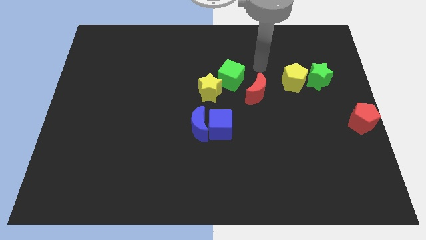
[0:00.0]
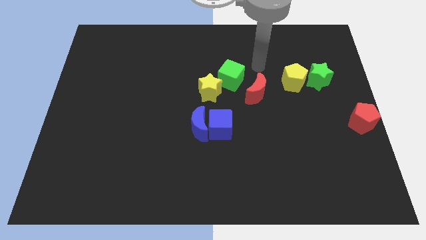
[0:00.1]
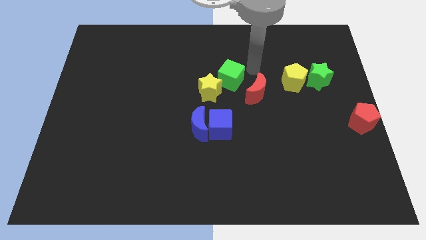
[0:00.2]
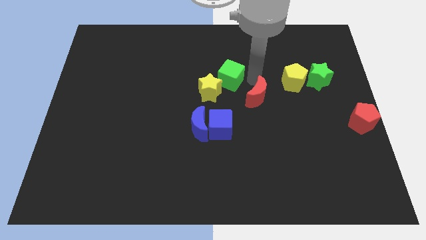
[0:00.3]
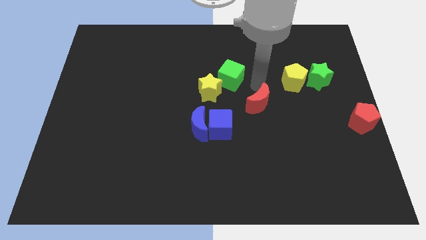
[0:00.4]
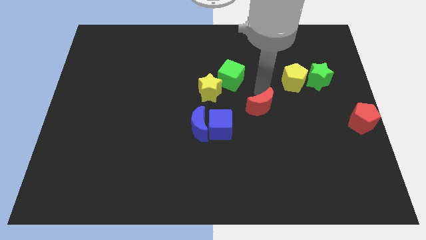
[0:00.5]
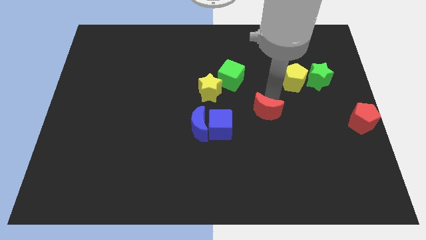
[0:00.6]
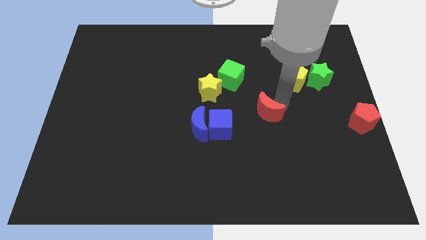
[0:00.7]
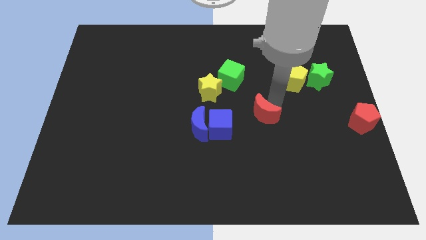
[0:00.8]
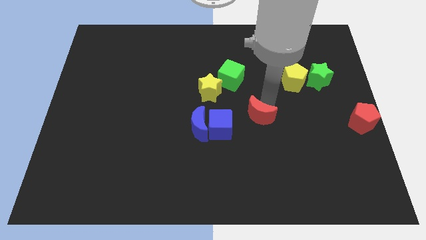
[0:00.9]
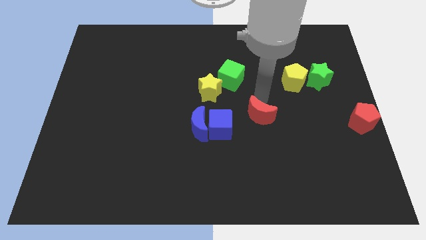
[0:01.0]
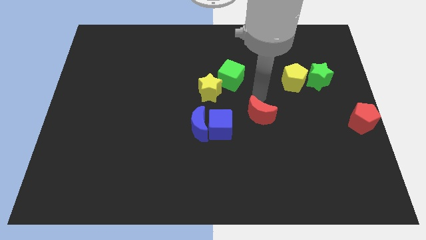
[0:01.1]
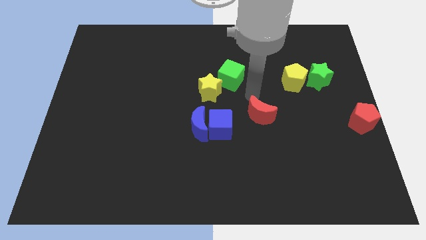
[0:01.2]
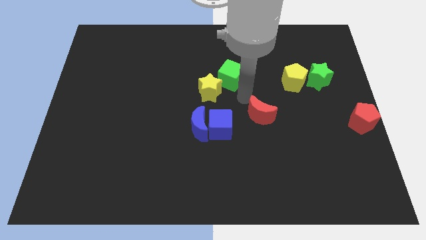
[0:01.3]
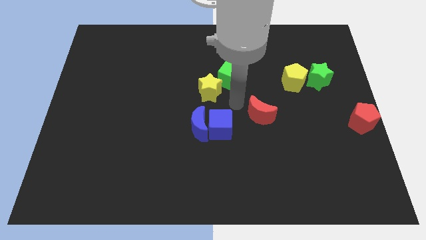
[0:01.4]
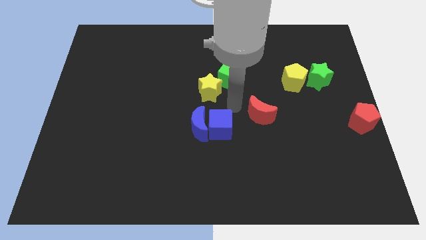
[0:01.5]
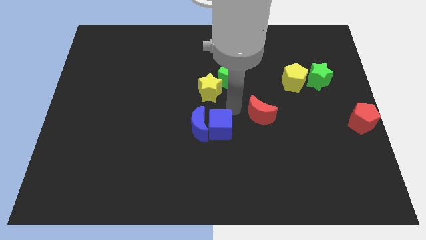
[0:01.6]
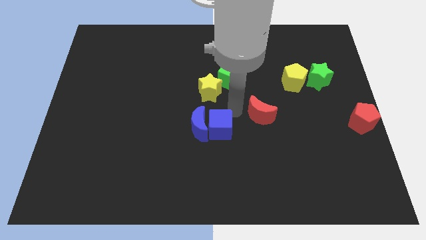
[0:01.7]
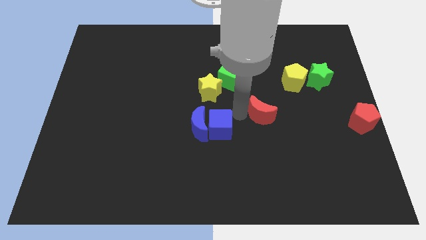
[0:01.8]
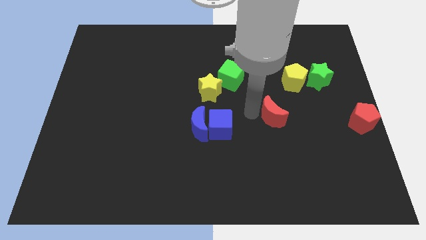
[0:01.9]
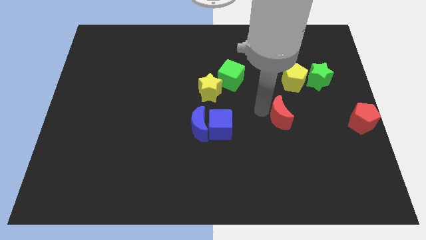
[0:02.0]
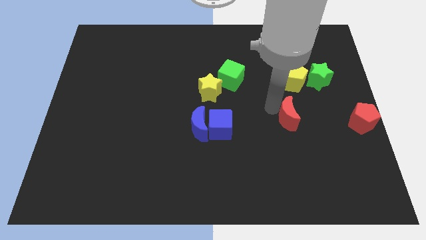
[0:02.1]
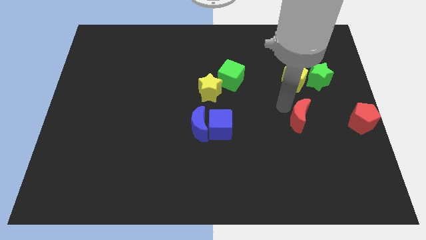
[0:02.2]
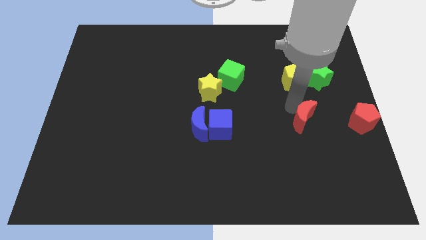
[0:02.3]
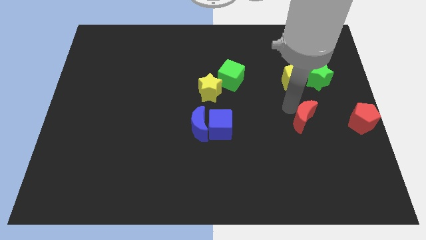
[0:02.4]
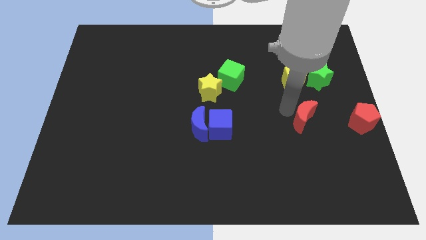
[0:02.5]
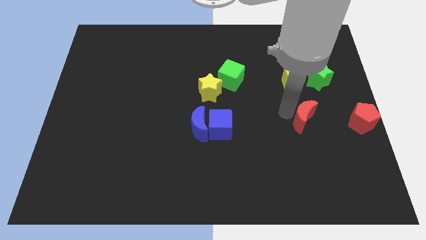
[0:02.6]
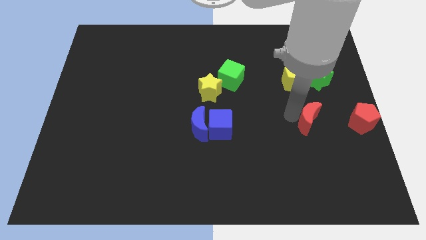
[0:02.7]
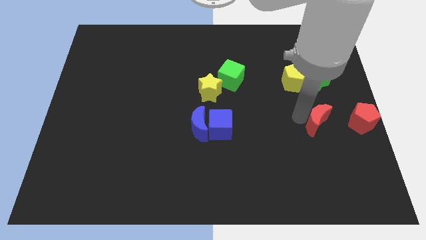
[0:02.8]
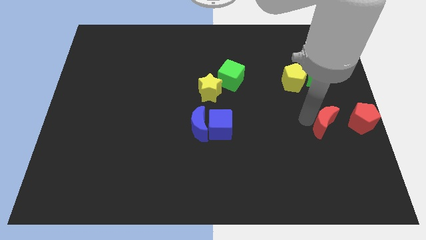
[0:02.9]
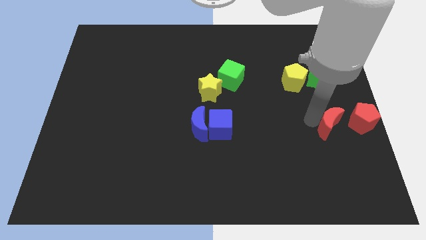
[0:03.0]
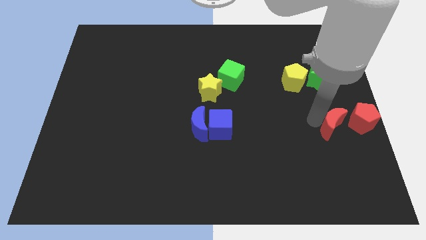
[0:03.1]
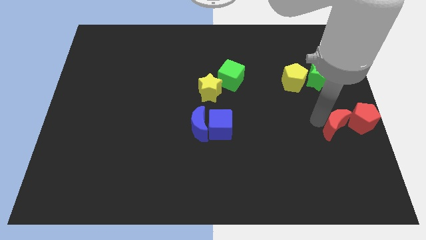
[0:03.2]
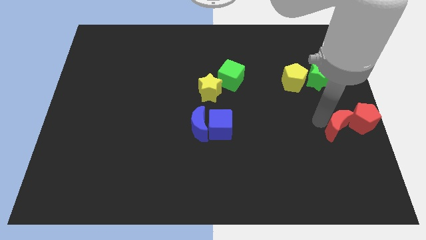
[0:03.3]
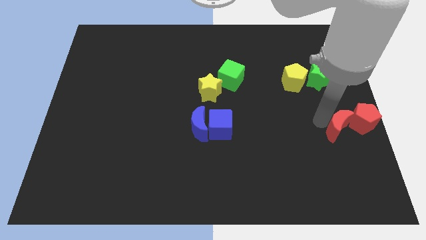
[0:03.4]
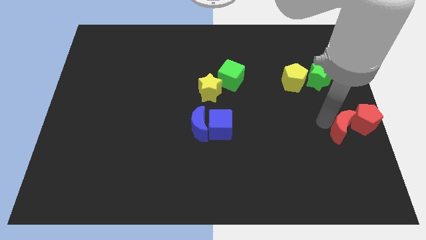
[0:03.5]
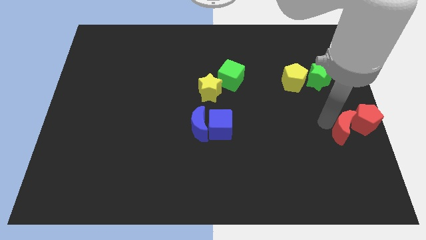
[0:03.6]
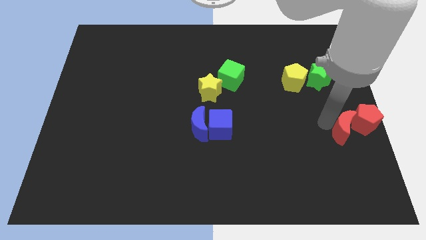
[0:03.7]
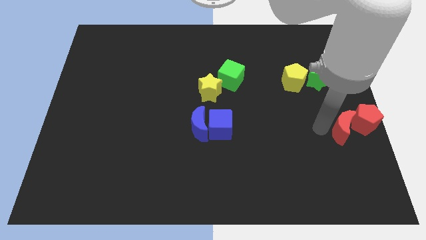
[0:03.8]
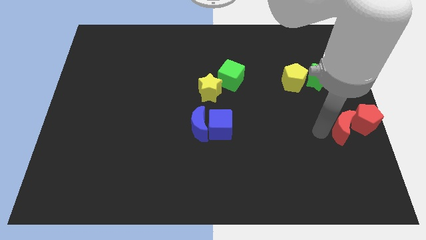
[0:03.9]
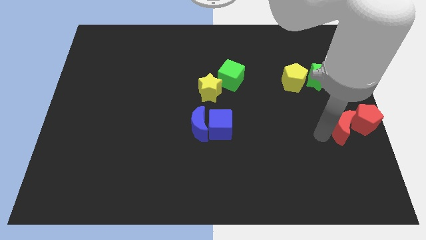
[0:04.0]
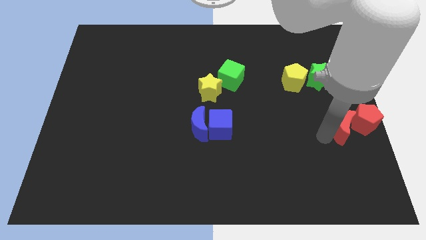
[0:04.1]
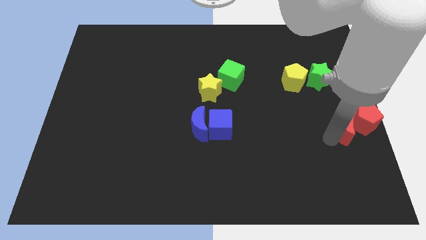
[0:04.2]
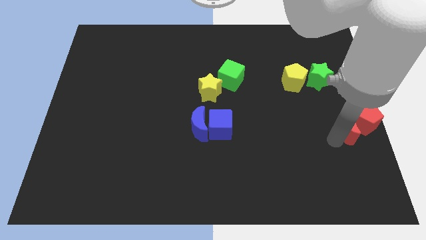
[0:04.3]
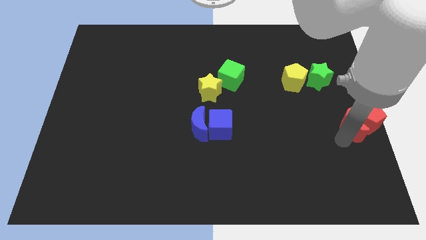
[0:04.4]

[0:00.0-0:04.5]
move the red crescent into the left side of the red pentagon

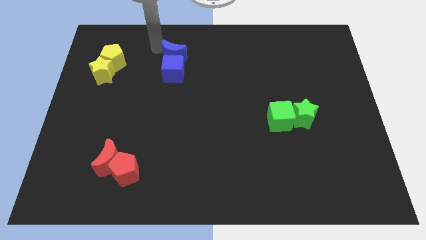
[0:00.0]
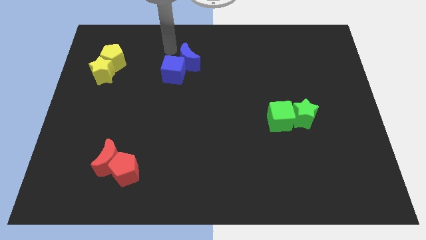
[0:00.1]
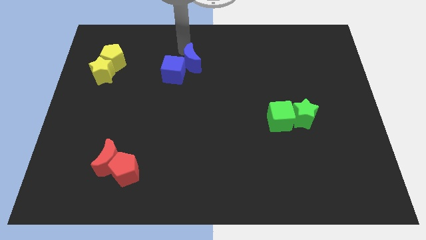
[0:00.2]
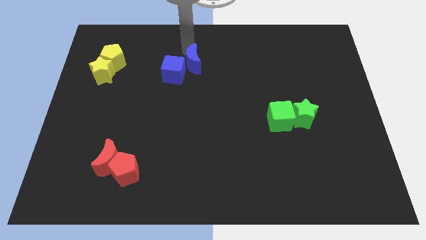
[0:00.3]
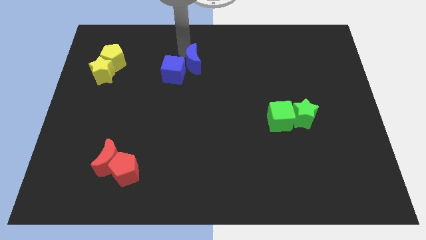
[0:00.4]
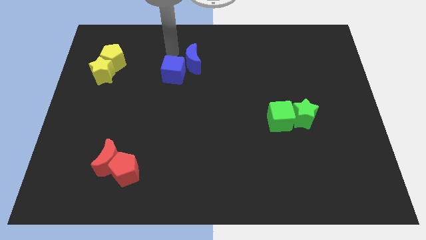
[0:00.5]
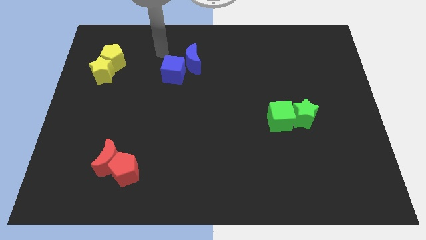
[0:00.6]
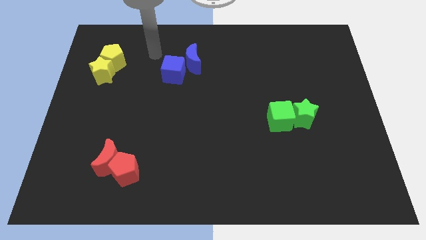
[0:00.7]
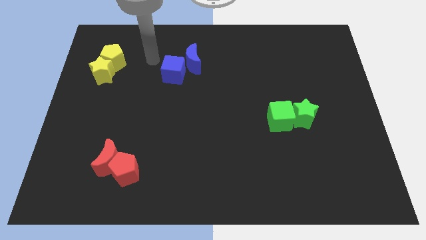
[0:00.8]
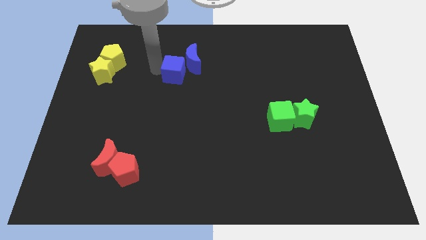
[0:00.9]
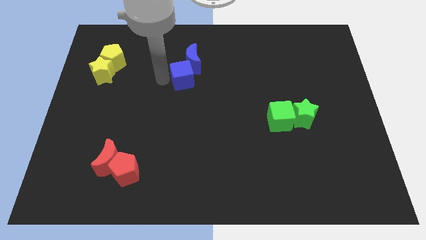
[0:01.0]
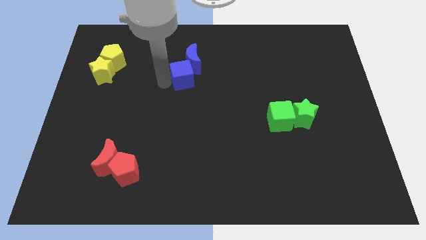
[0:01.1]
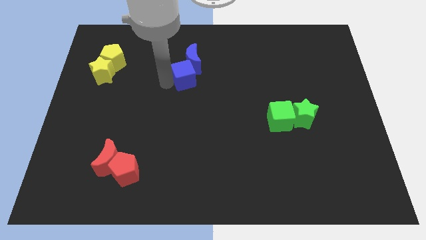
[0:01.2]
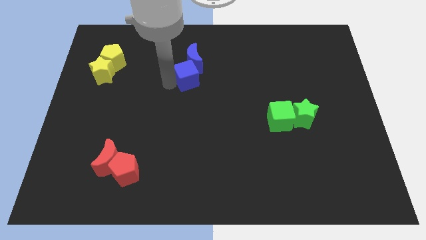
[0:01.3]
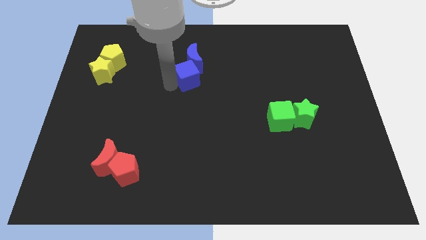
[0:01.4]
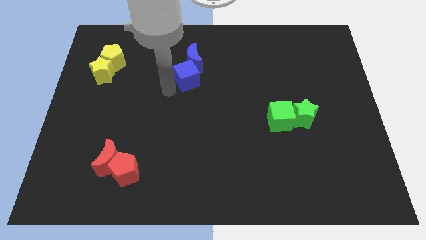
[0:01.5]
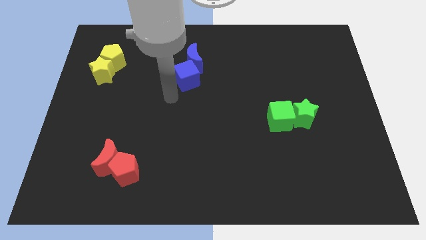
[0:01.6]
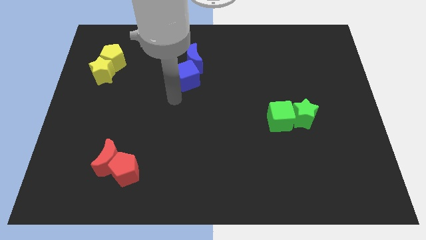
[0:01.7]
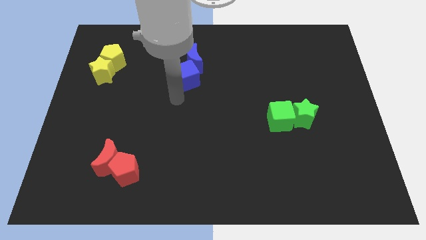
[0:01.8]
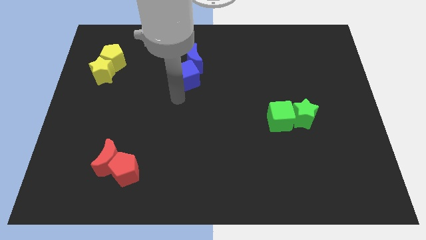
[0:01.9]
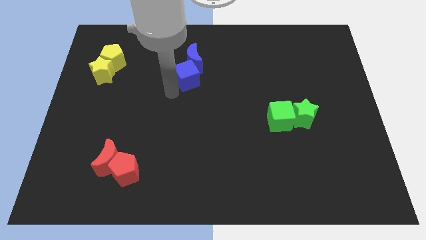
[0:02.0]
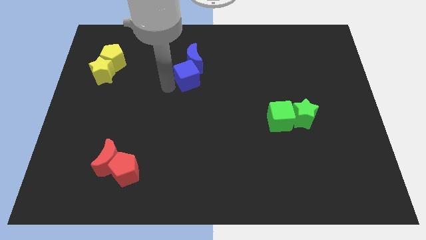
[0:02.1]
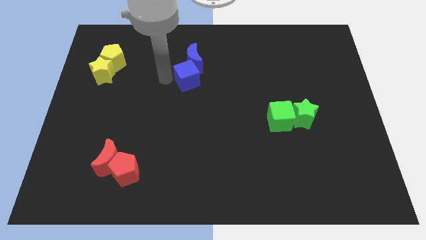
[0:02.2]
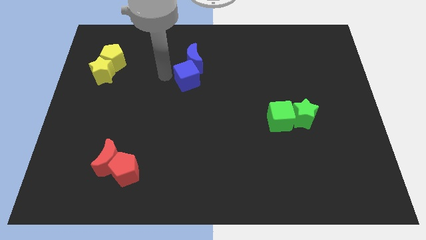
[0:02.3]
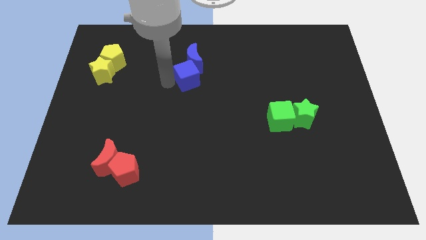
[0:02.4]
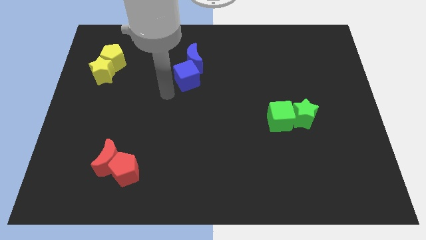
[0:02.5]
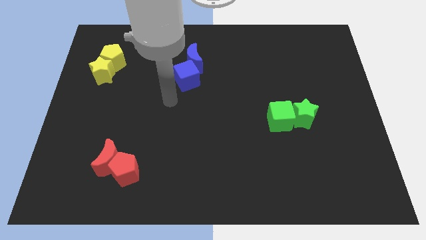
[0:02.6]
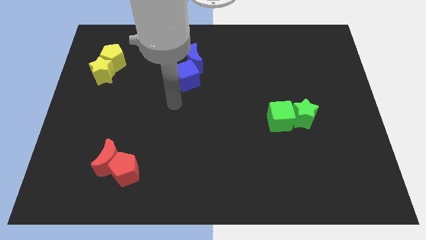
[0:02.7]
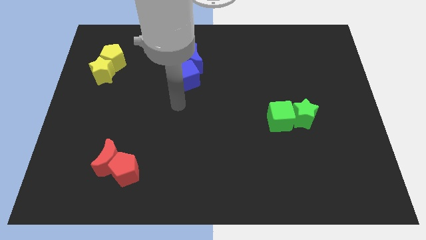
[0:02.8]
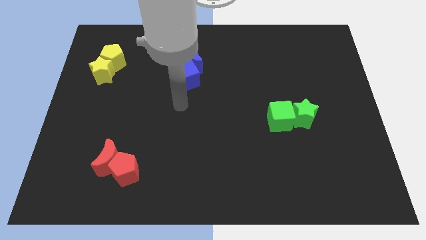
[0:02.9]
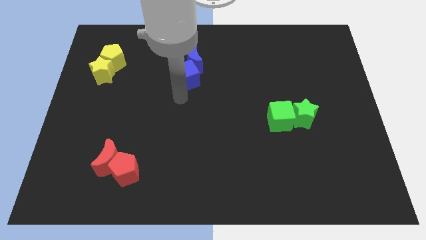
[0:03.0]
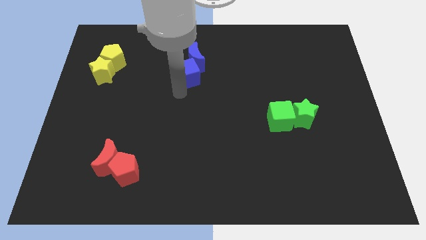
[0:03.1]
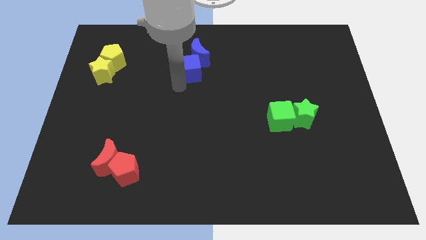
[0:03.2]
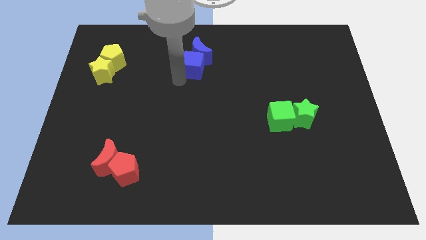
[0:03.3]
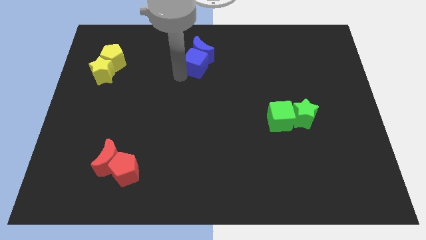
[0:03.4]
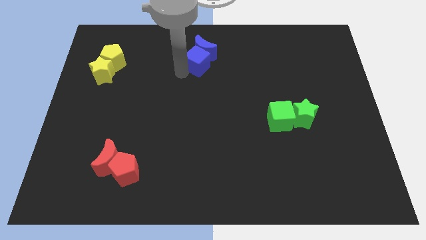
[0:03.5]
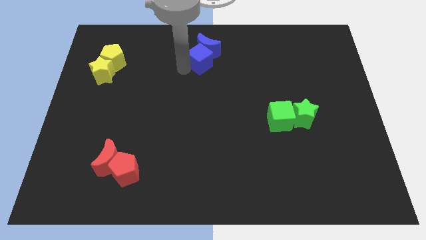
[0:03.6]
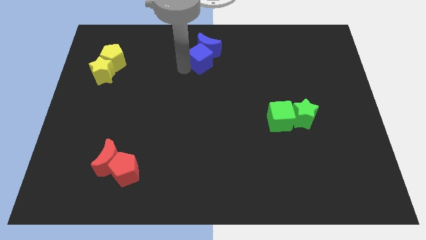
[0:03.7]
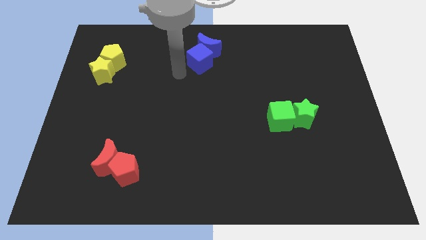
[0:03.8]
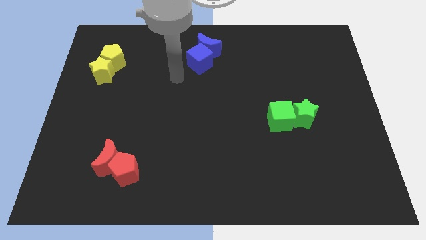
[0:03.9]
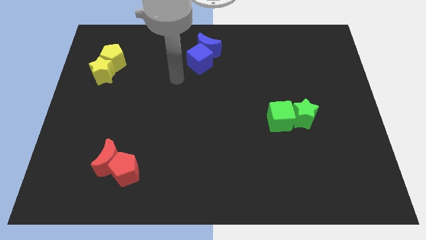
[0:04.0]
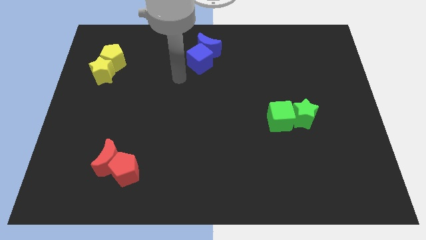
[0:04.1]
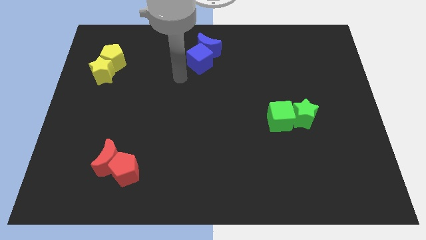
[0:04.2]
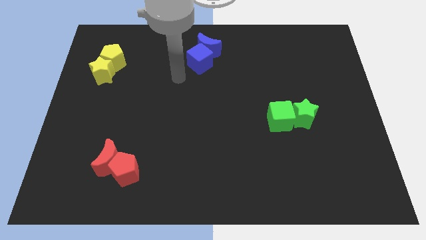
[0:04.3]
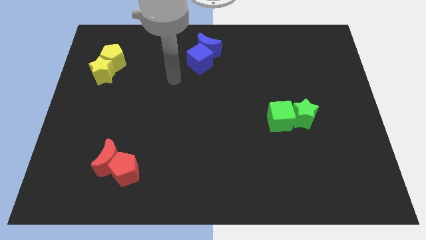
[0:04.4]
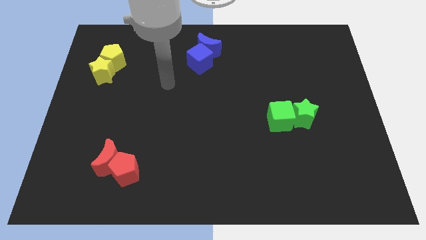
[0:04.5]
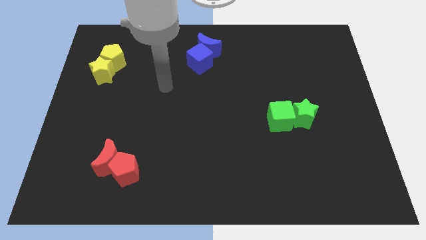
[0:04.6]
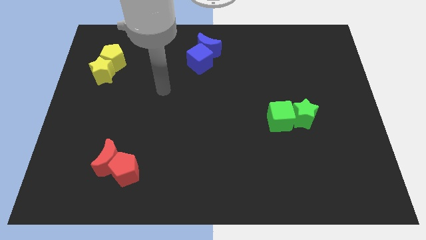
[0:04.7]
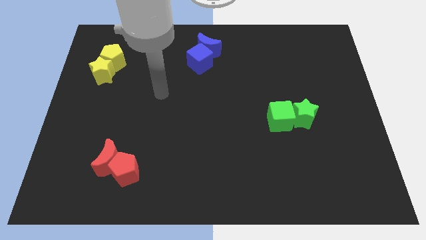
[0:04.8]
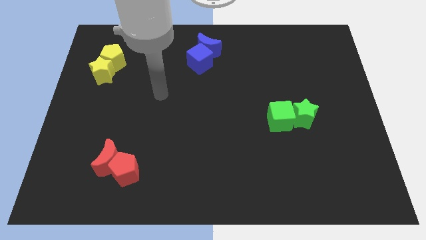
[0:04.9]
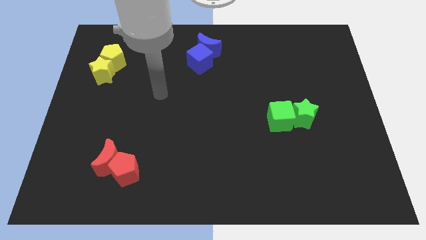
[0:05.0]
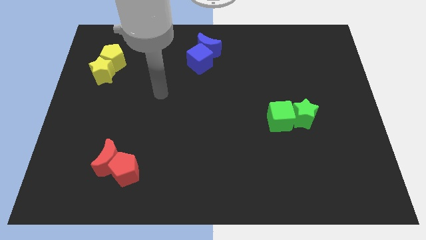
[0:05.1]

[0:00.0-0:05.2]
move the blue cube and blue crescent towards the top center
